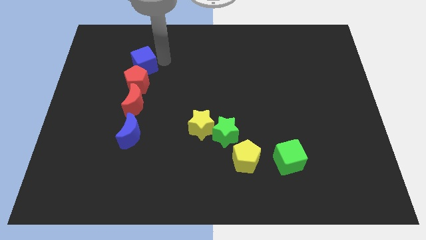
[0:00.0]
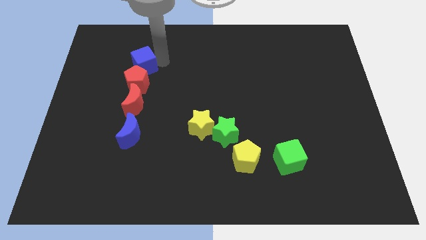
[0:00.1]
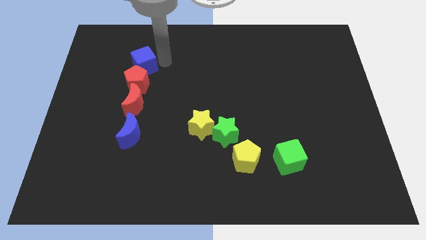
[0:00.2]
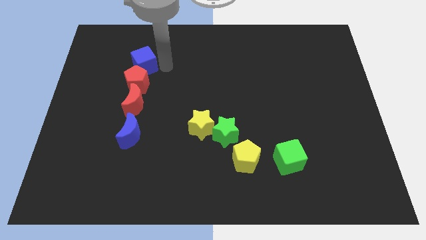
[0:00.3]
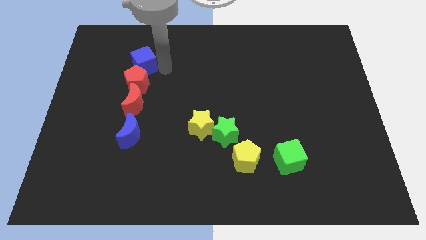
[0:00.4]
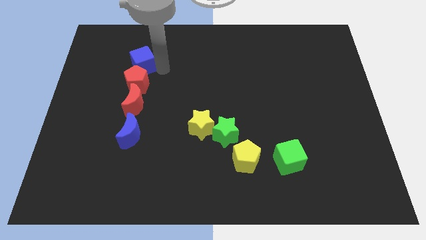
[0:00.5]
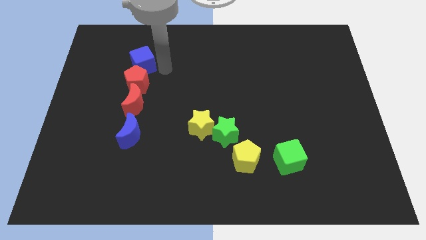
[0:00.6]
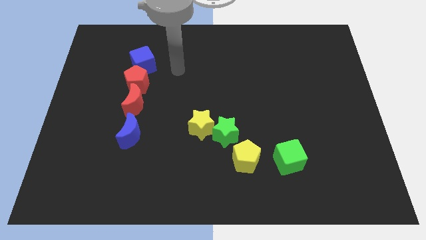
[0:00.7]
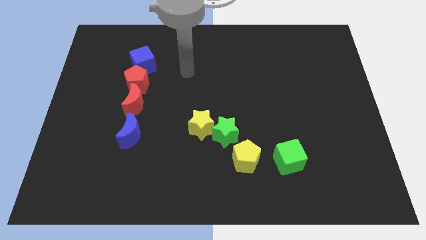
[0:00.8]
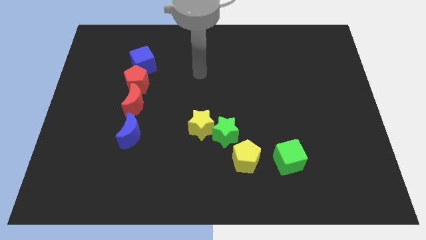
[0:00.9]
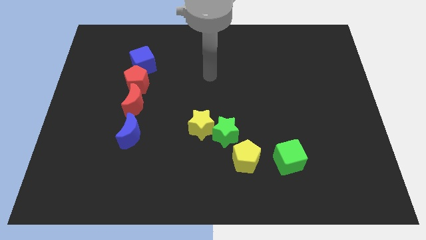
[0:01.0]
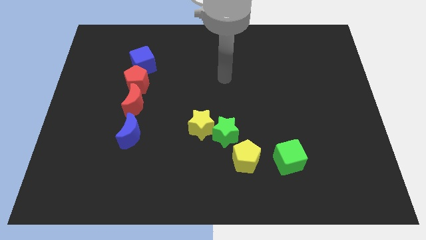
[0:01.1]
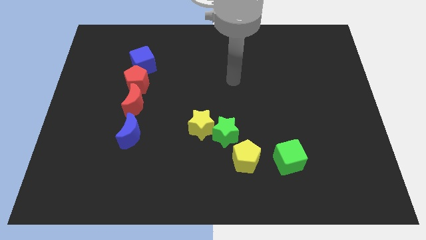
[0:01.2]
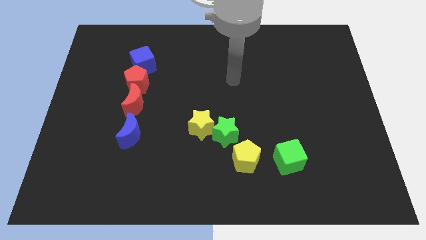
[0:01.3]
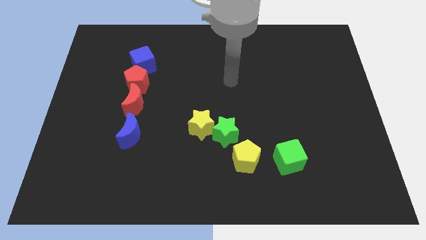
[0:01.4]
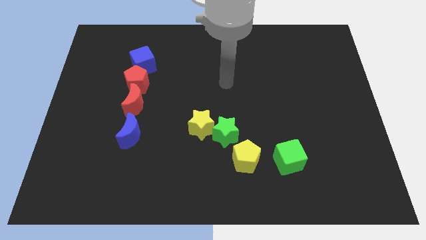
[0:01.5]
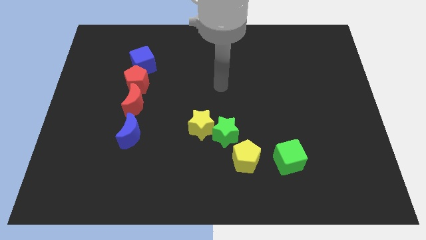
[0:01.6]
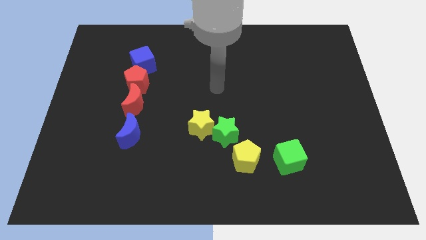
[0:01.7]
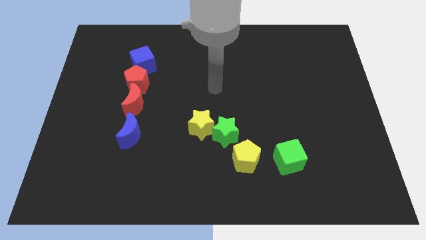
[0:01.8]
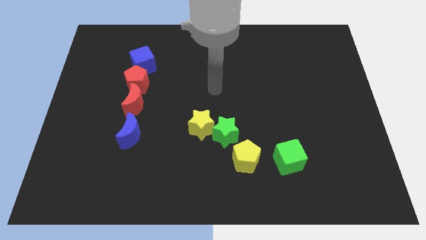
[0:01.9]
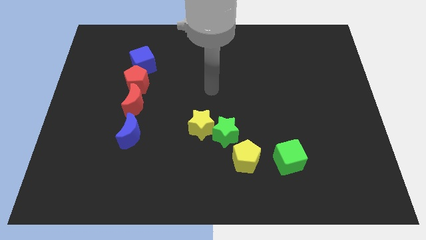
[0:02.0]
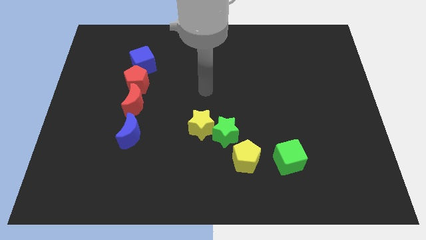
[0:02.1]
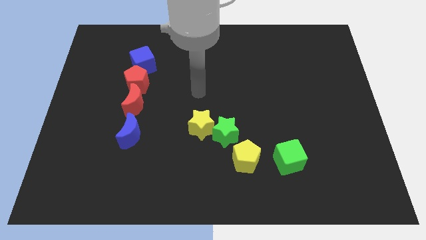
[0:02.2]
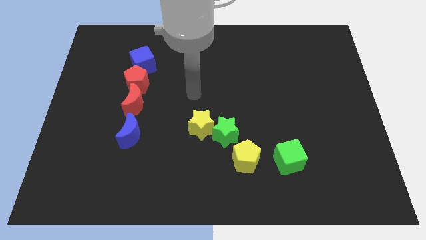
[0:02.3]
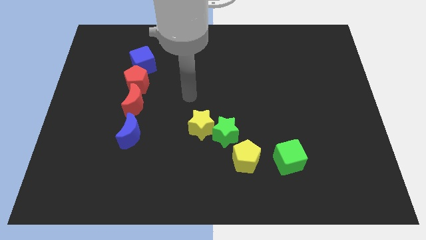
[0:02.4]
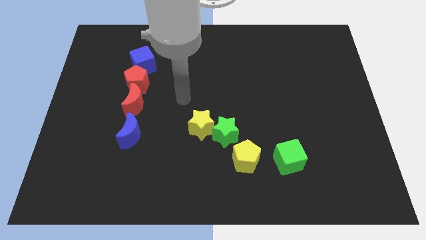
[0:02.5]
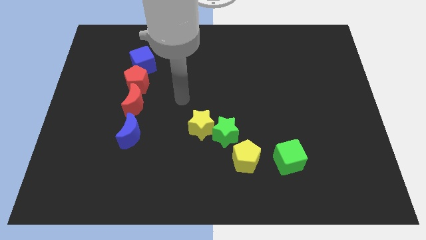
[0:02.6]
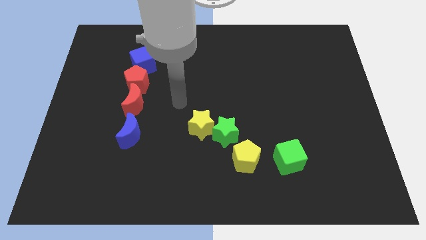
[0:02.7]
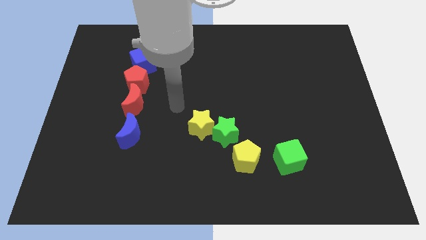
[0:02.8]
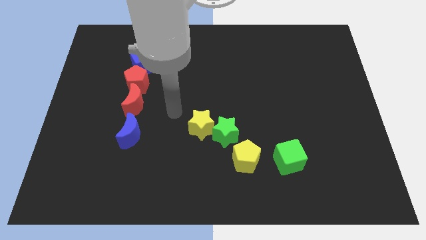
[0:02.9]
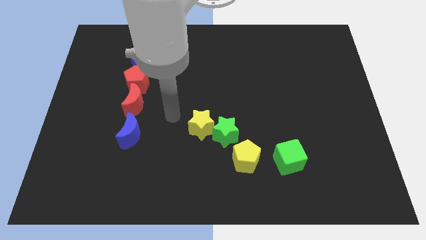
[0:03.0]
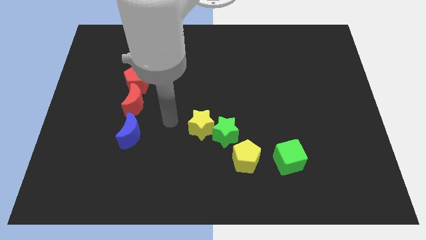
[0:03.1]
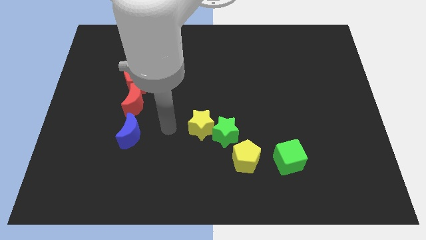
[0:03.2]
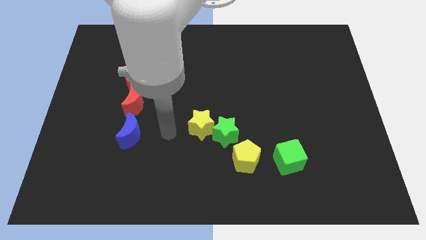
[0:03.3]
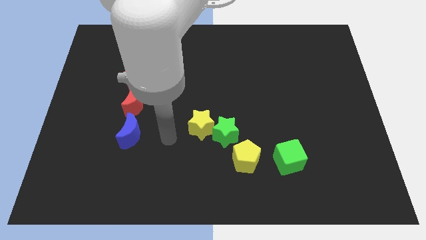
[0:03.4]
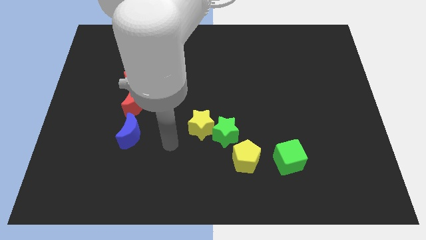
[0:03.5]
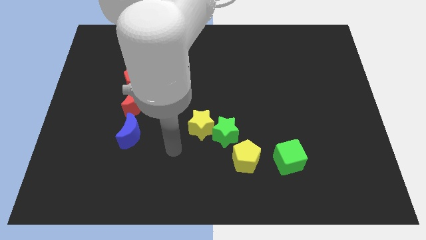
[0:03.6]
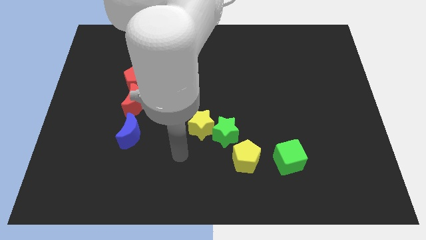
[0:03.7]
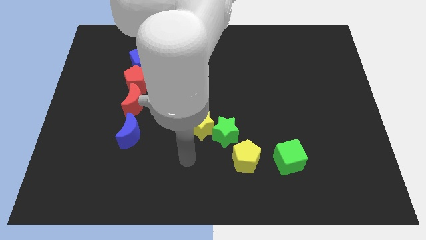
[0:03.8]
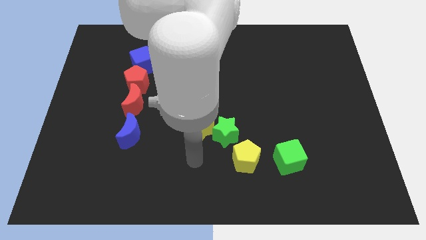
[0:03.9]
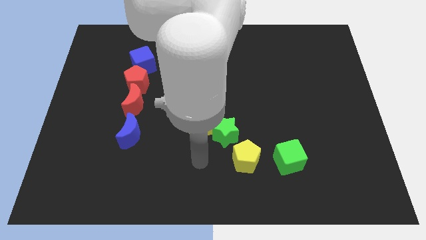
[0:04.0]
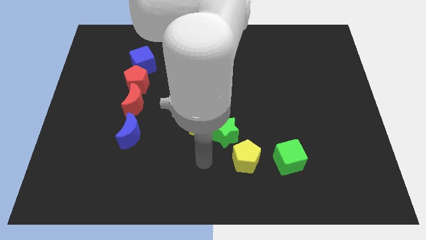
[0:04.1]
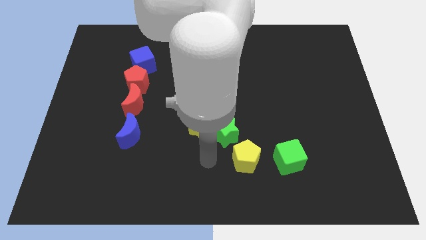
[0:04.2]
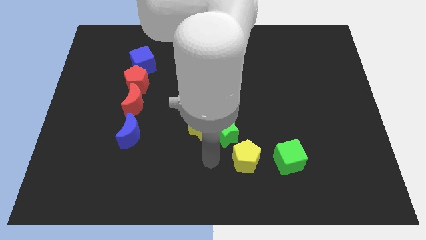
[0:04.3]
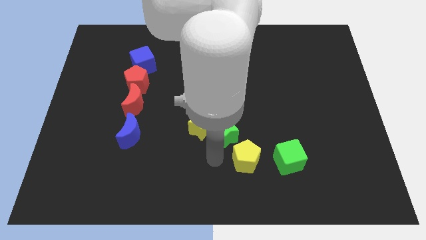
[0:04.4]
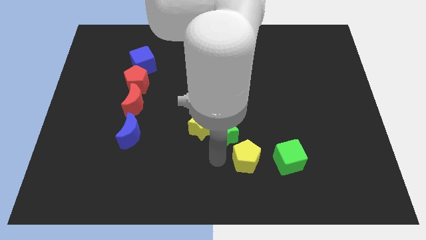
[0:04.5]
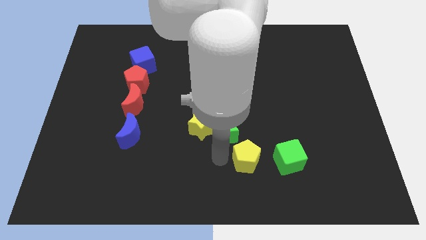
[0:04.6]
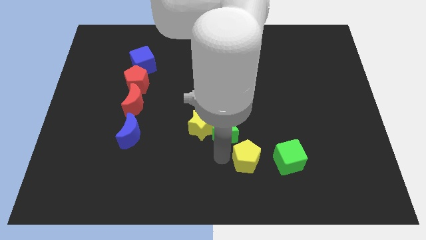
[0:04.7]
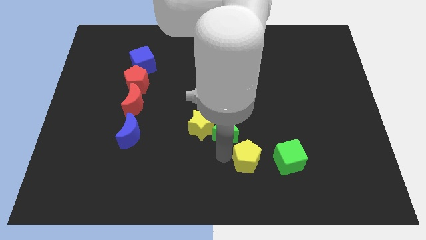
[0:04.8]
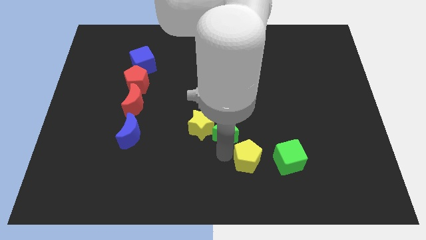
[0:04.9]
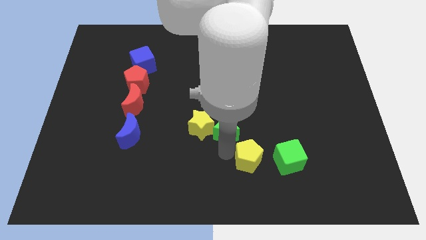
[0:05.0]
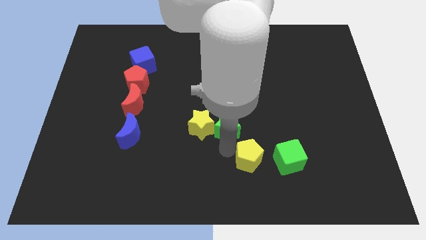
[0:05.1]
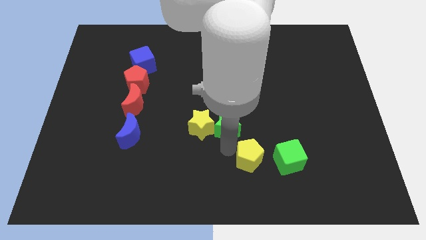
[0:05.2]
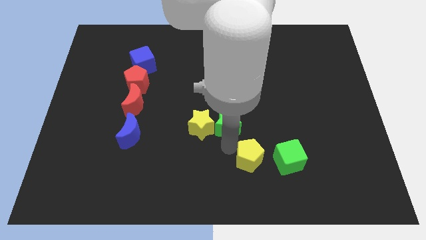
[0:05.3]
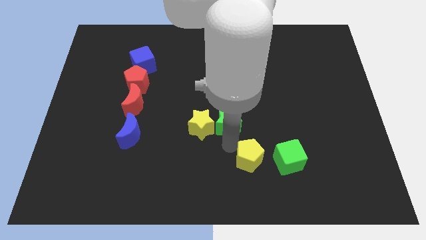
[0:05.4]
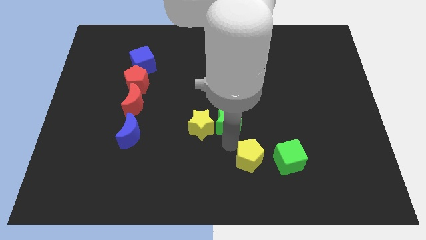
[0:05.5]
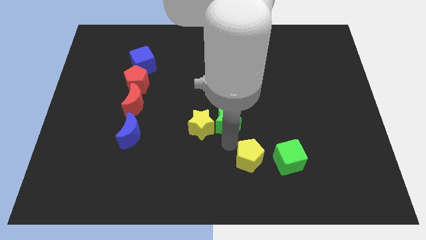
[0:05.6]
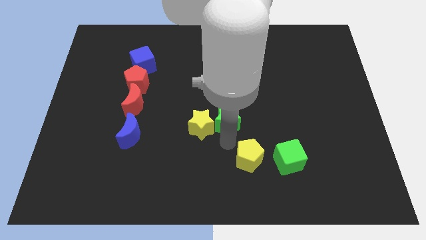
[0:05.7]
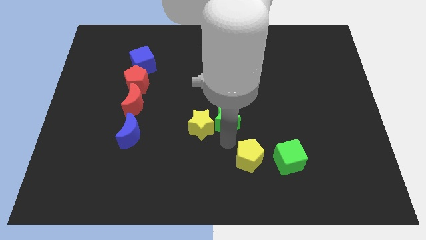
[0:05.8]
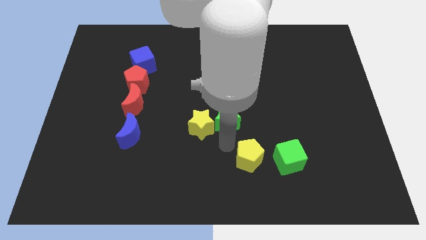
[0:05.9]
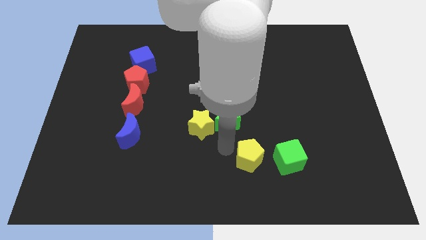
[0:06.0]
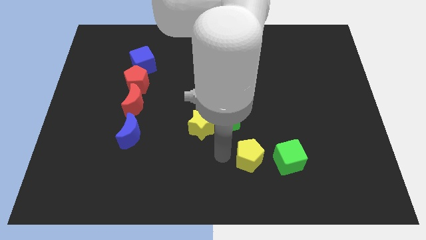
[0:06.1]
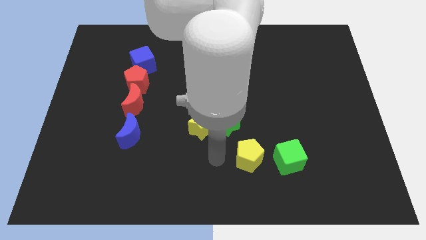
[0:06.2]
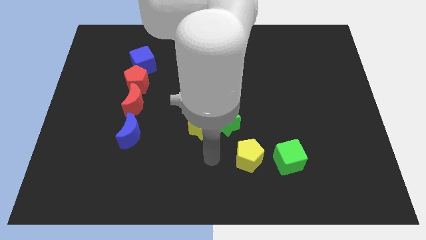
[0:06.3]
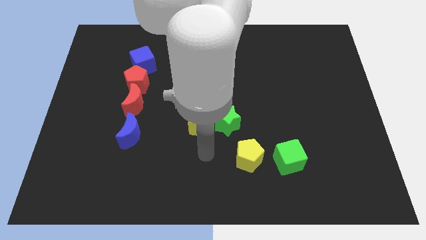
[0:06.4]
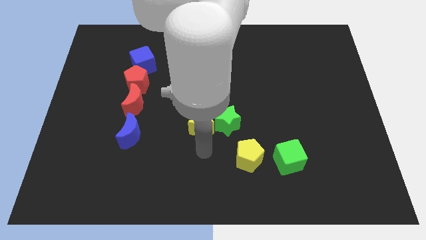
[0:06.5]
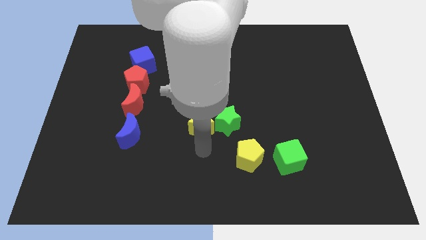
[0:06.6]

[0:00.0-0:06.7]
move the green star right beside the yellow star

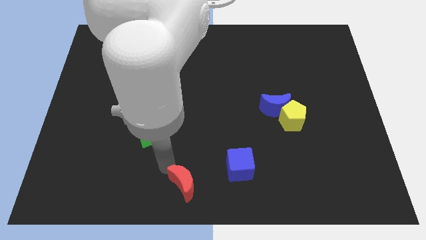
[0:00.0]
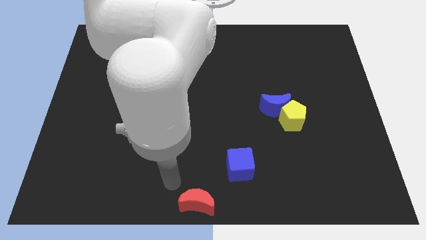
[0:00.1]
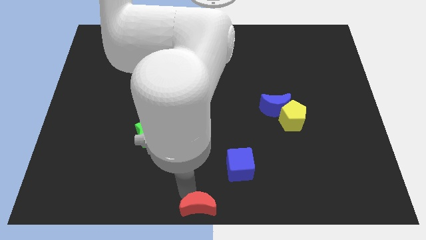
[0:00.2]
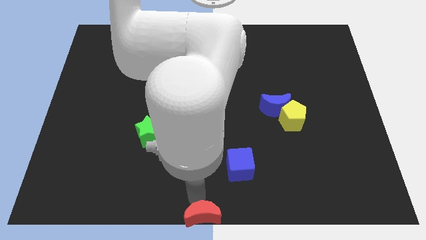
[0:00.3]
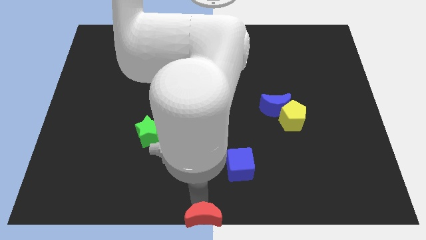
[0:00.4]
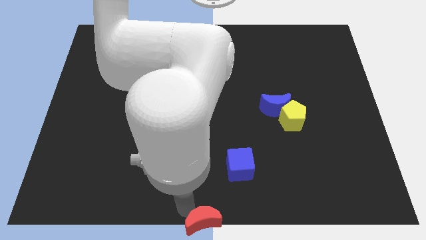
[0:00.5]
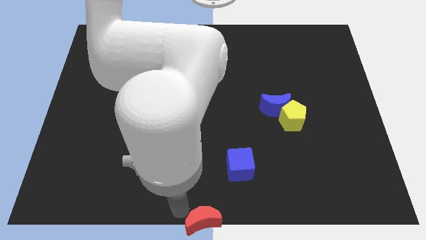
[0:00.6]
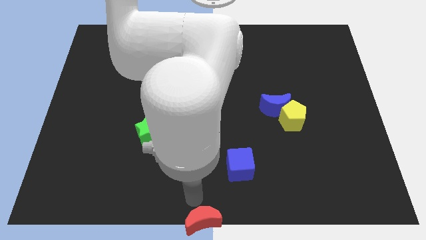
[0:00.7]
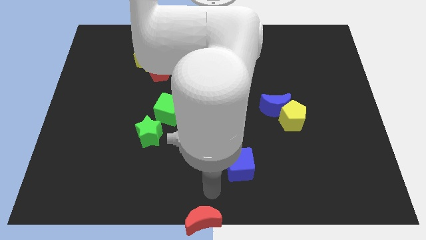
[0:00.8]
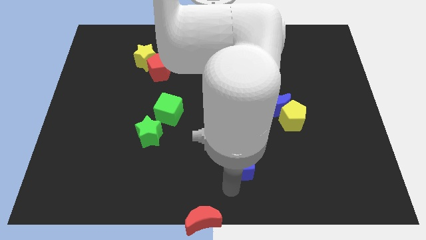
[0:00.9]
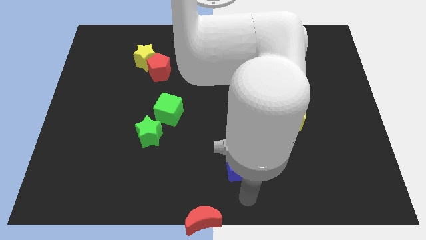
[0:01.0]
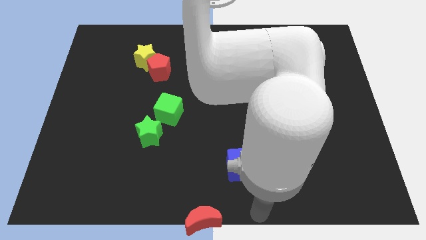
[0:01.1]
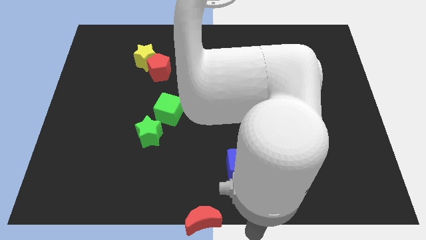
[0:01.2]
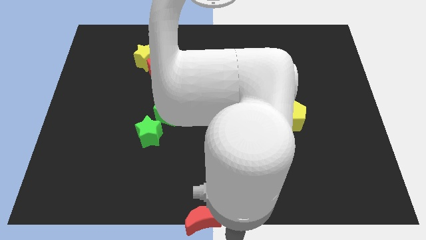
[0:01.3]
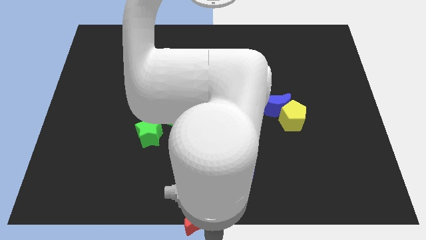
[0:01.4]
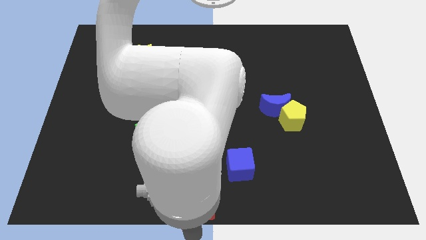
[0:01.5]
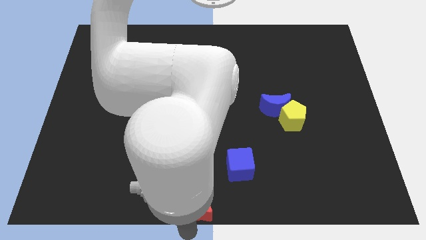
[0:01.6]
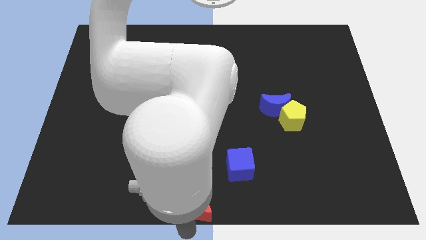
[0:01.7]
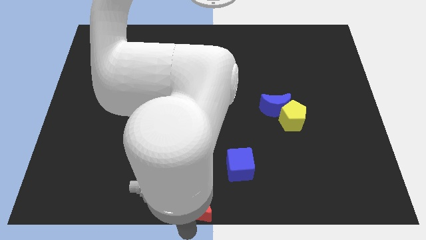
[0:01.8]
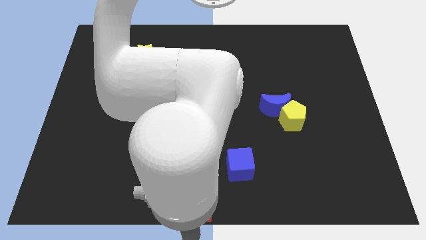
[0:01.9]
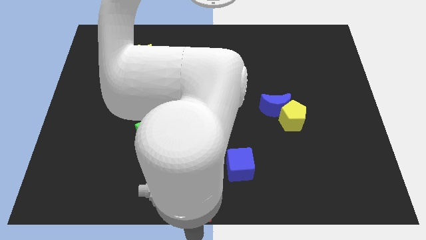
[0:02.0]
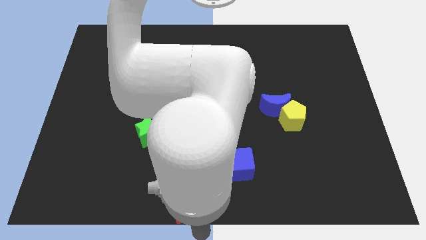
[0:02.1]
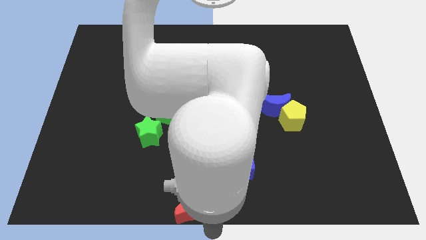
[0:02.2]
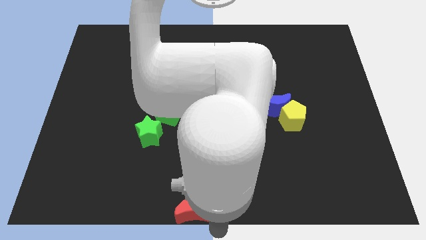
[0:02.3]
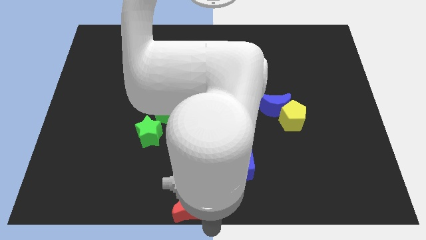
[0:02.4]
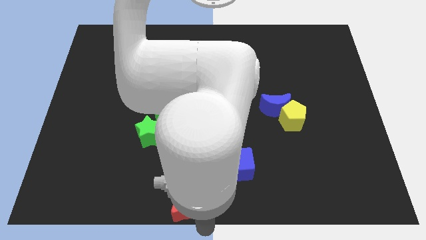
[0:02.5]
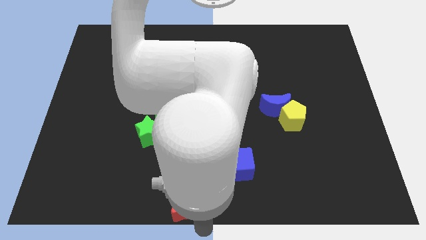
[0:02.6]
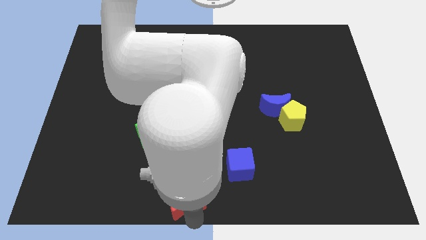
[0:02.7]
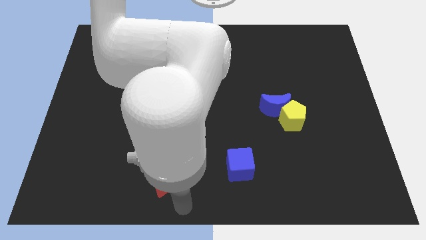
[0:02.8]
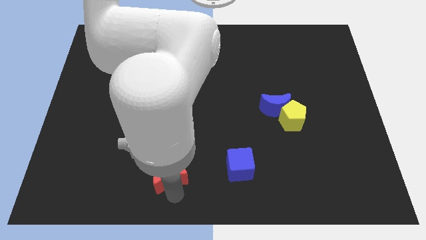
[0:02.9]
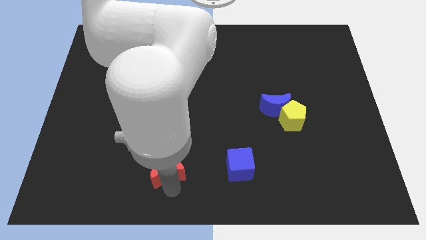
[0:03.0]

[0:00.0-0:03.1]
move the red crescent ot the left of the blue cube
